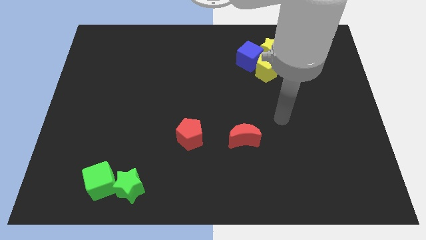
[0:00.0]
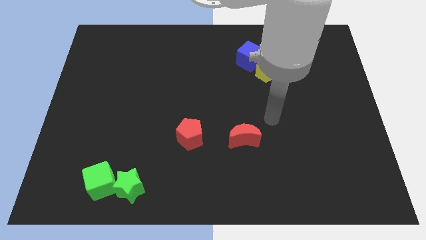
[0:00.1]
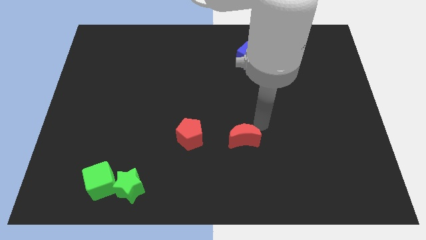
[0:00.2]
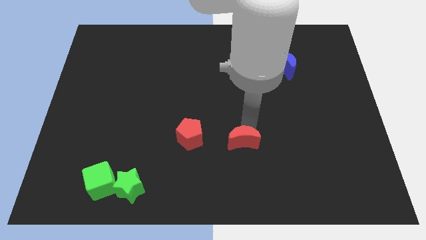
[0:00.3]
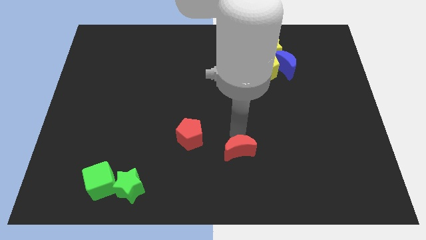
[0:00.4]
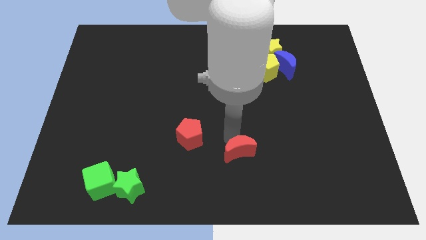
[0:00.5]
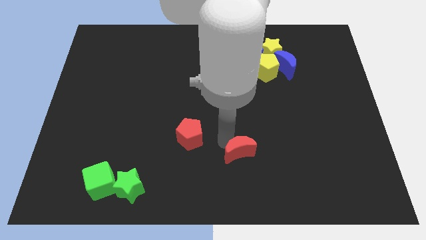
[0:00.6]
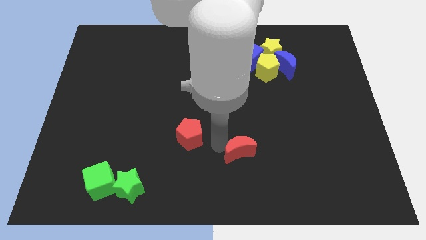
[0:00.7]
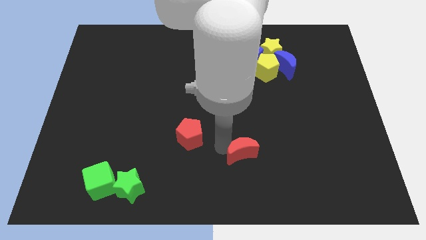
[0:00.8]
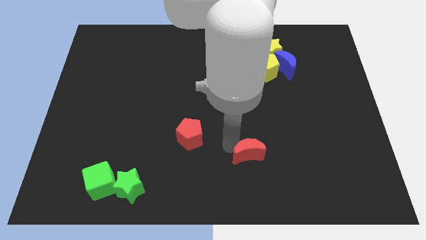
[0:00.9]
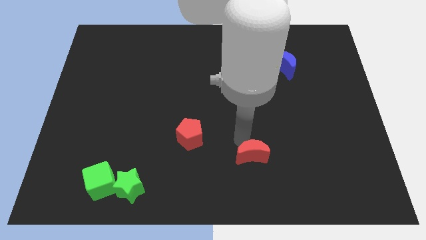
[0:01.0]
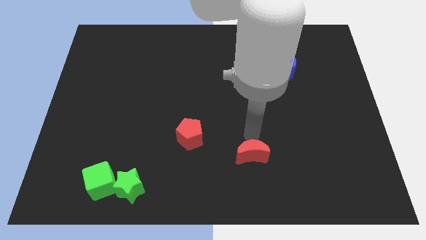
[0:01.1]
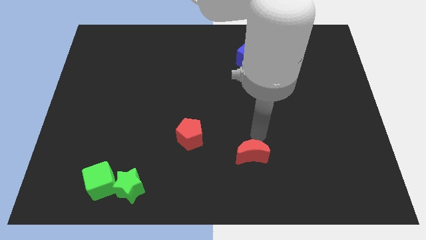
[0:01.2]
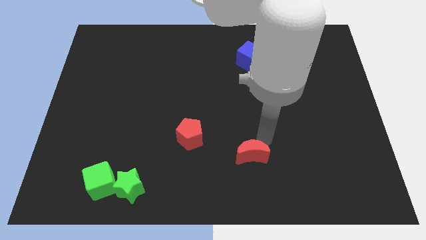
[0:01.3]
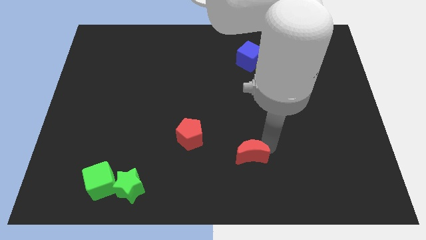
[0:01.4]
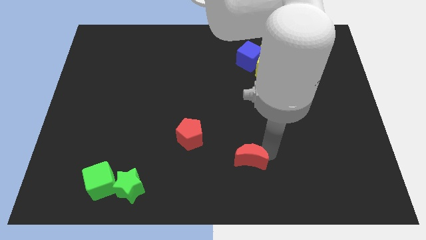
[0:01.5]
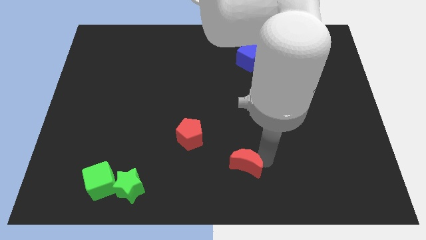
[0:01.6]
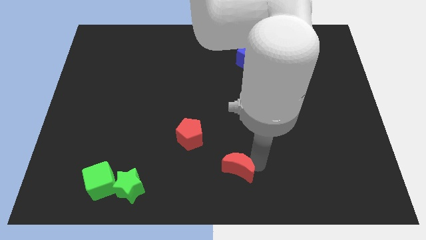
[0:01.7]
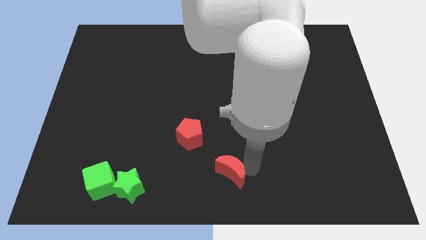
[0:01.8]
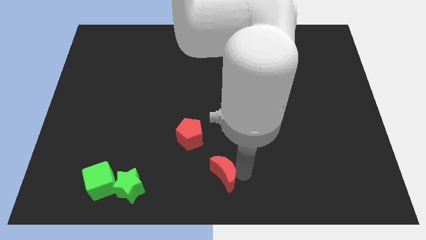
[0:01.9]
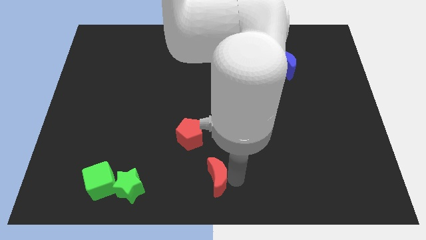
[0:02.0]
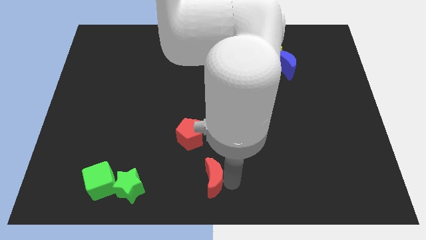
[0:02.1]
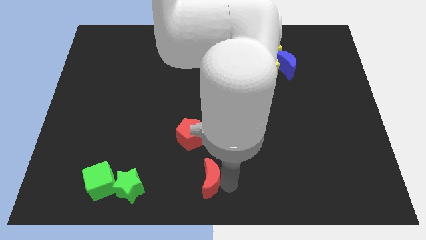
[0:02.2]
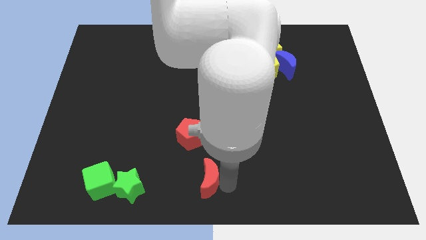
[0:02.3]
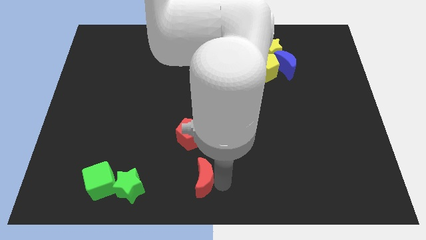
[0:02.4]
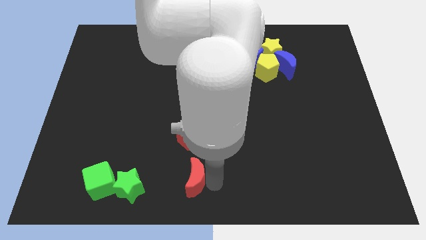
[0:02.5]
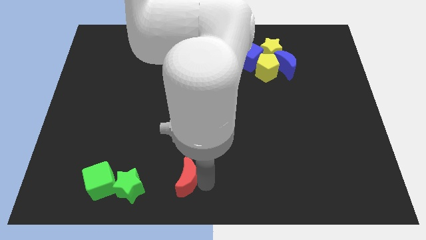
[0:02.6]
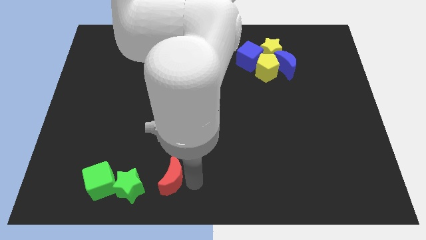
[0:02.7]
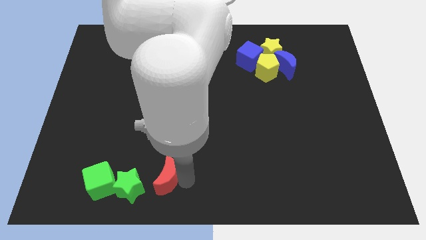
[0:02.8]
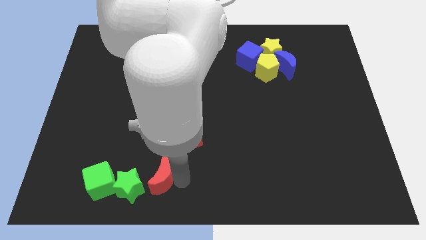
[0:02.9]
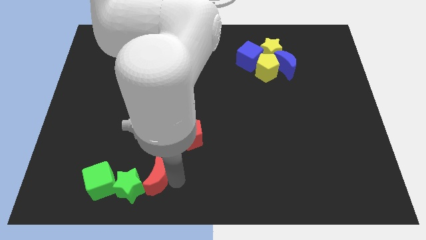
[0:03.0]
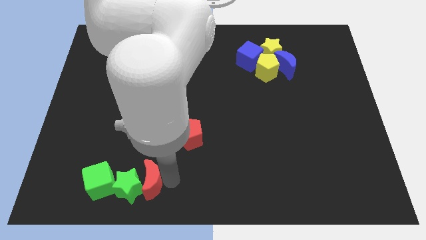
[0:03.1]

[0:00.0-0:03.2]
move the red penatgon diagonally right to the green star

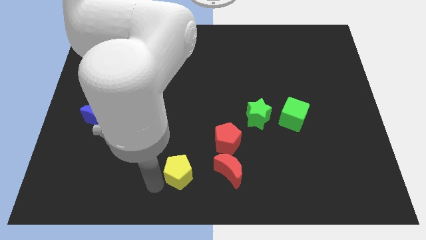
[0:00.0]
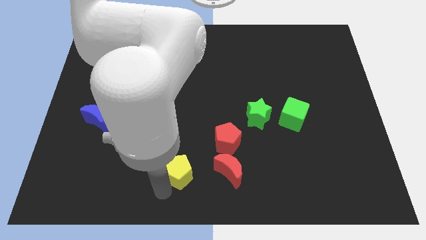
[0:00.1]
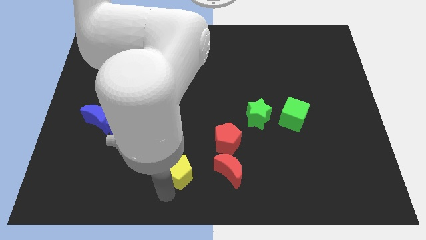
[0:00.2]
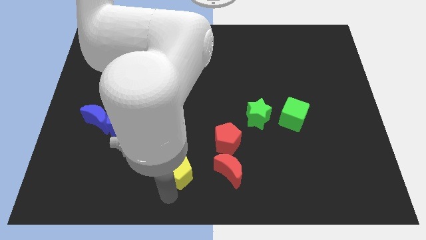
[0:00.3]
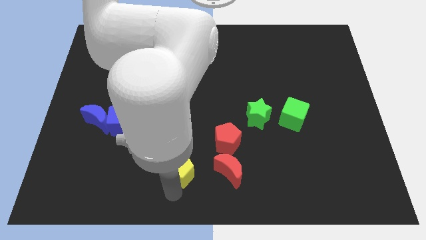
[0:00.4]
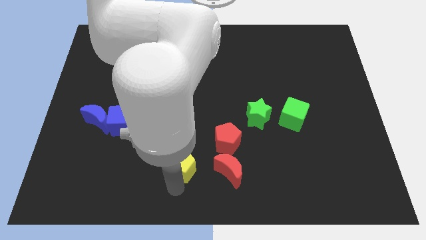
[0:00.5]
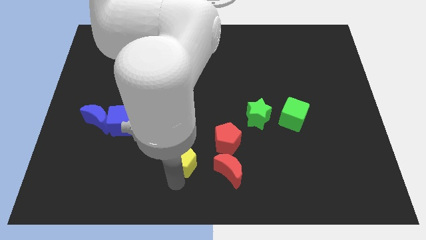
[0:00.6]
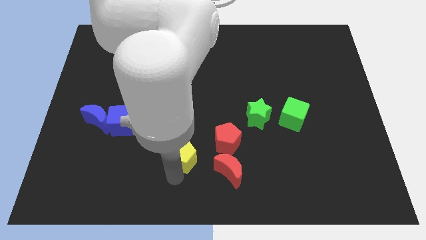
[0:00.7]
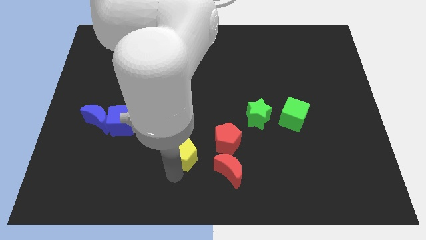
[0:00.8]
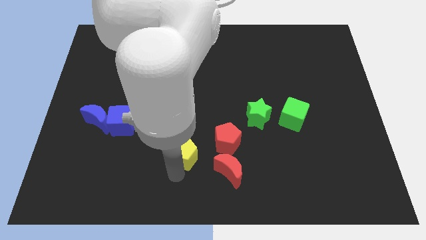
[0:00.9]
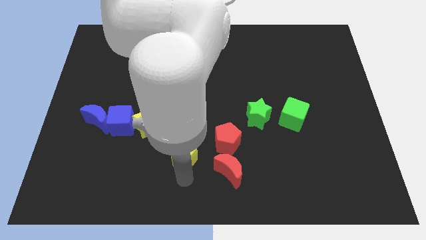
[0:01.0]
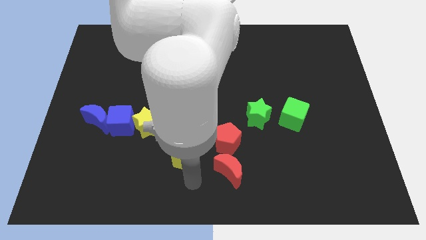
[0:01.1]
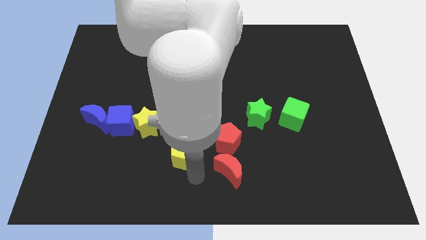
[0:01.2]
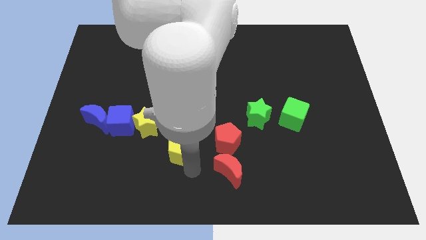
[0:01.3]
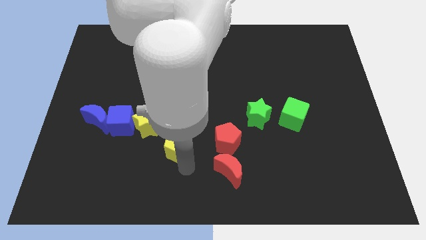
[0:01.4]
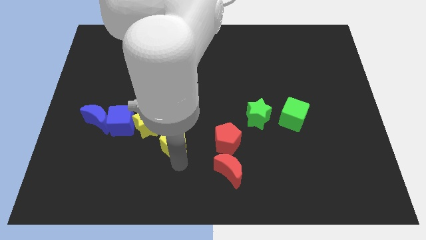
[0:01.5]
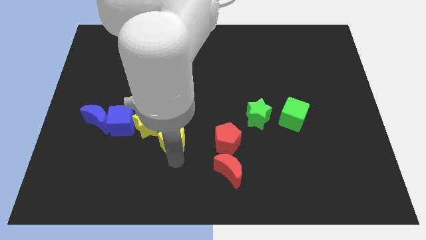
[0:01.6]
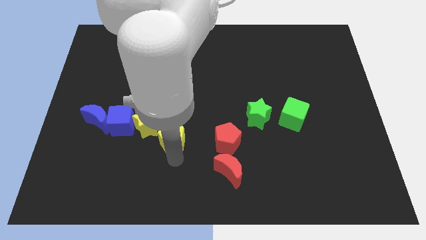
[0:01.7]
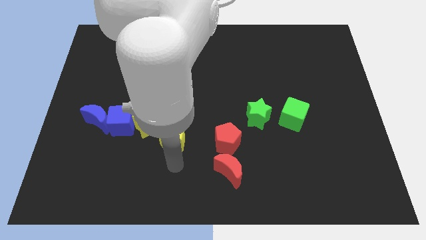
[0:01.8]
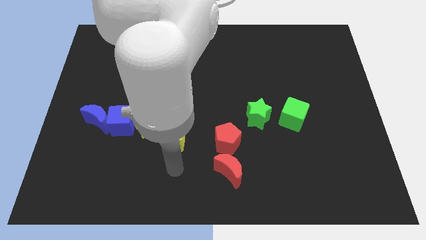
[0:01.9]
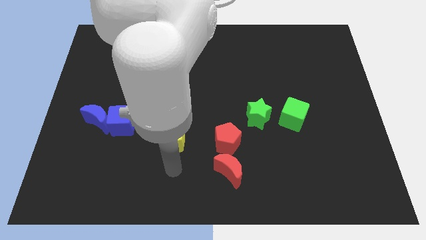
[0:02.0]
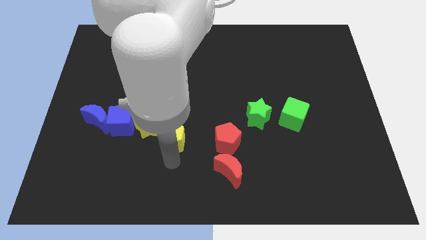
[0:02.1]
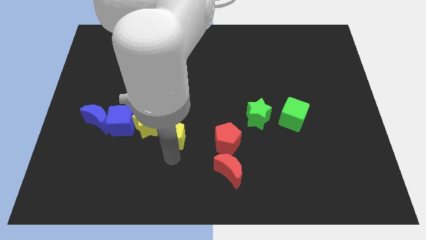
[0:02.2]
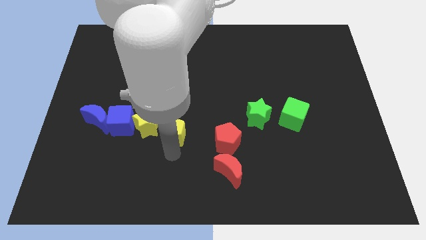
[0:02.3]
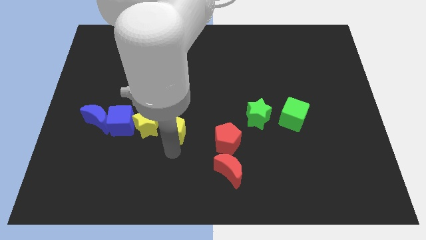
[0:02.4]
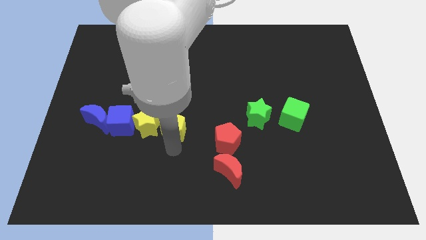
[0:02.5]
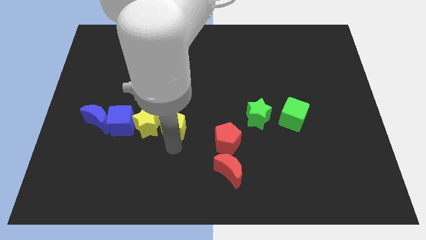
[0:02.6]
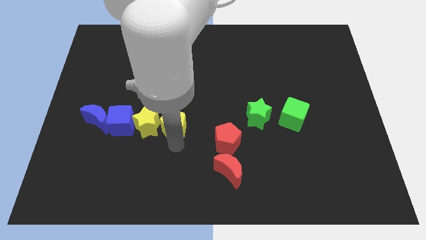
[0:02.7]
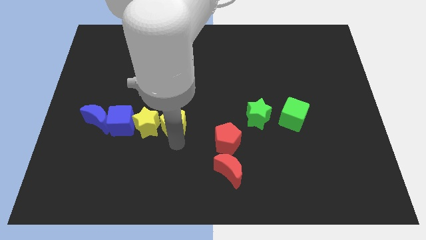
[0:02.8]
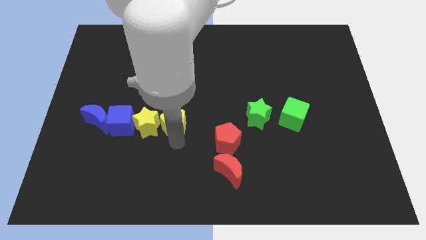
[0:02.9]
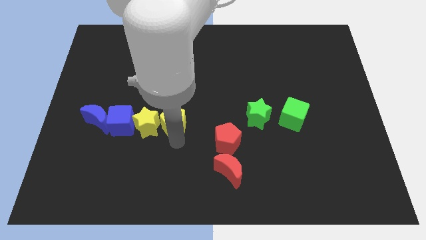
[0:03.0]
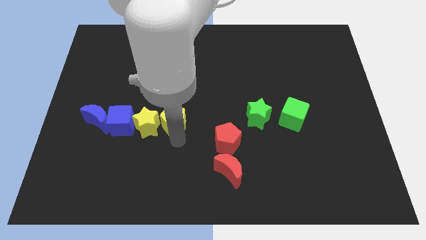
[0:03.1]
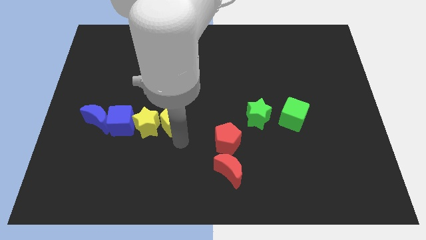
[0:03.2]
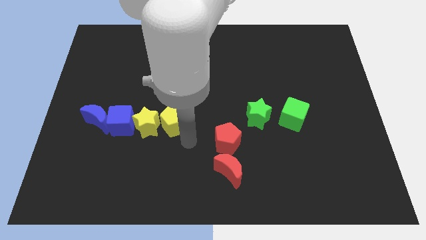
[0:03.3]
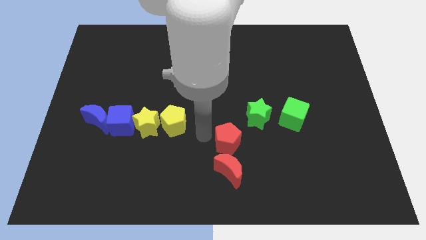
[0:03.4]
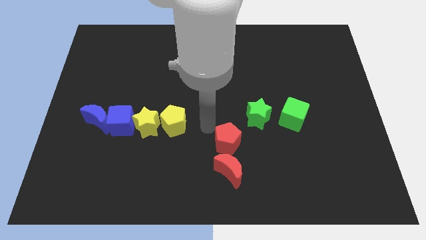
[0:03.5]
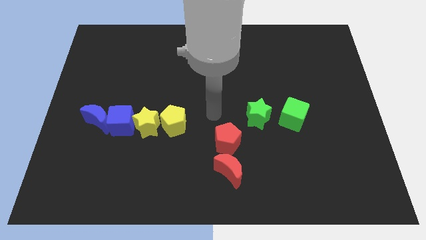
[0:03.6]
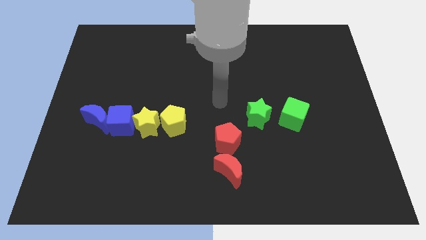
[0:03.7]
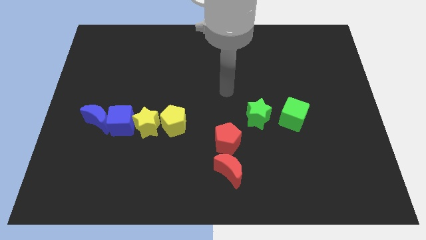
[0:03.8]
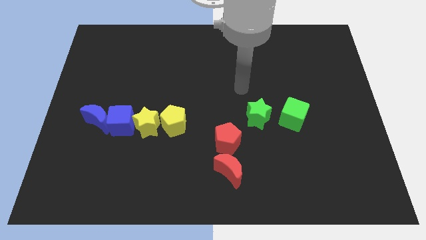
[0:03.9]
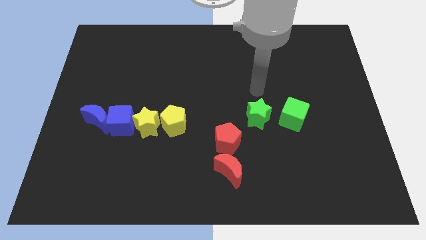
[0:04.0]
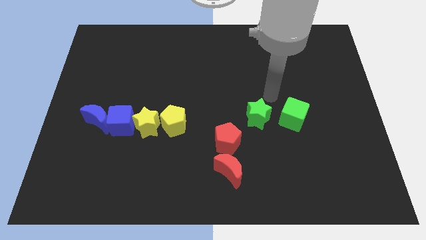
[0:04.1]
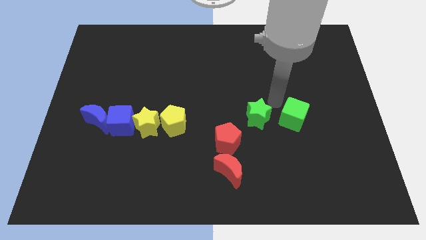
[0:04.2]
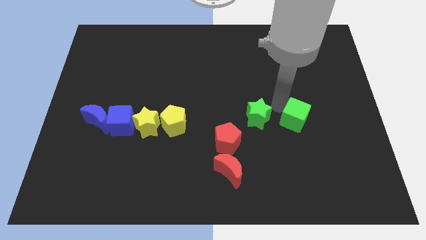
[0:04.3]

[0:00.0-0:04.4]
place the yellow pentagon beside the yellow star

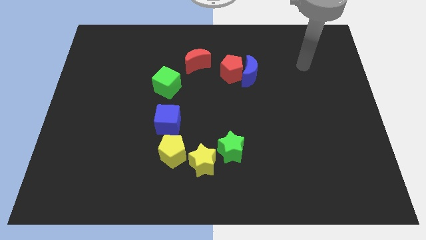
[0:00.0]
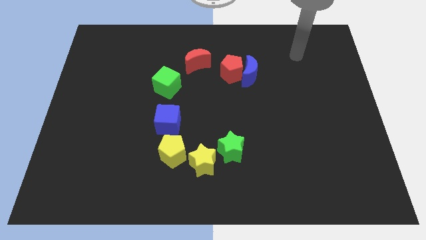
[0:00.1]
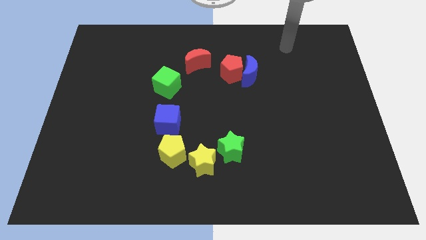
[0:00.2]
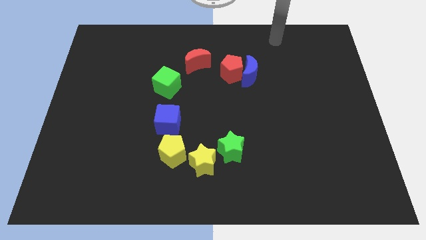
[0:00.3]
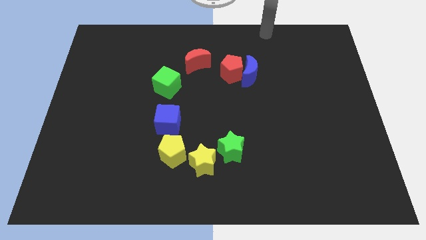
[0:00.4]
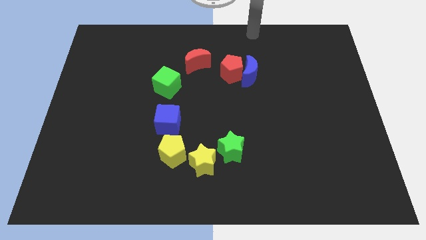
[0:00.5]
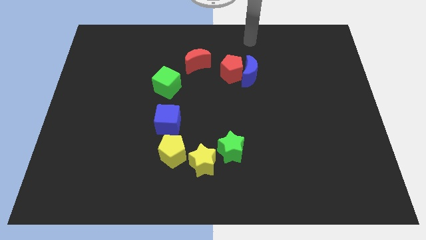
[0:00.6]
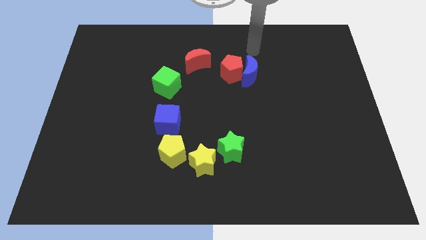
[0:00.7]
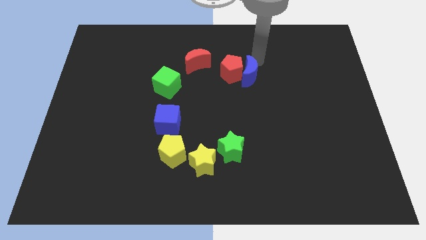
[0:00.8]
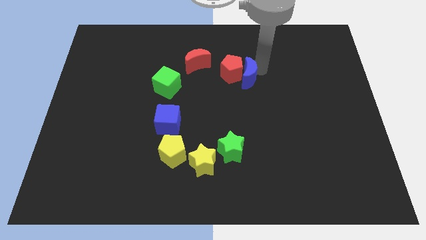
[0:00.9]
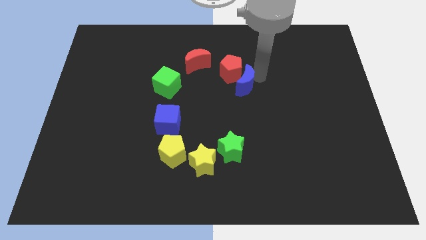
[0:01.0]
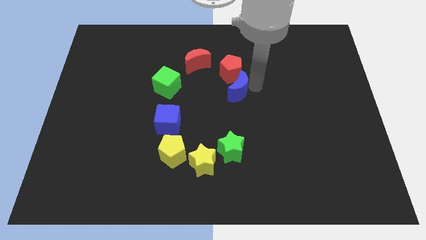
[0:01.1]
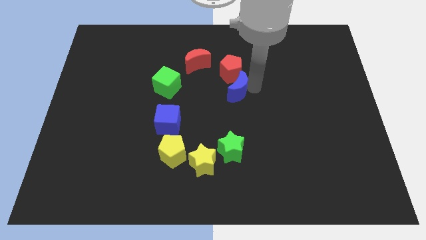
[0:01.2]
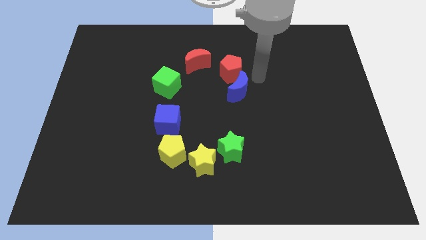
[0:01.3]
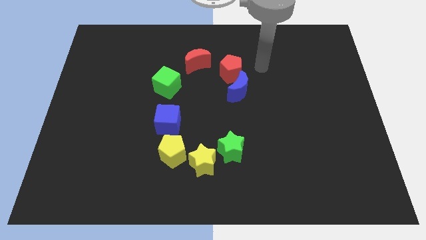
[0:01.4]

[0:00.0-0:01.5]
place the blue moon below the red pentagon
